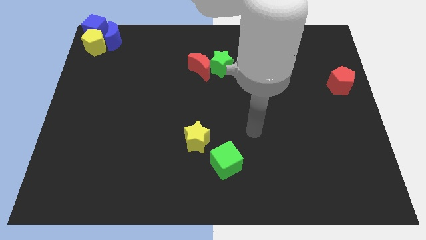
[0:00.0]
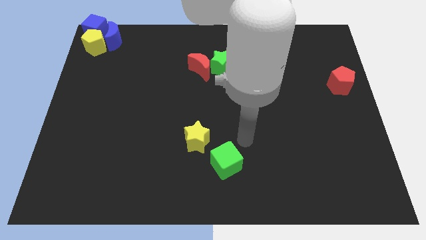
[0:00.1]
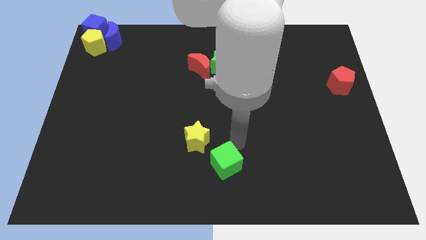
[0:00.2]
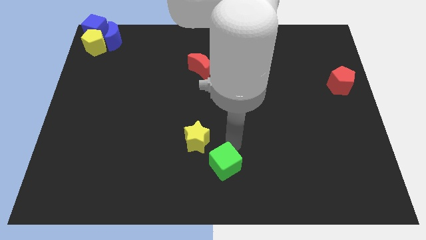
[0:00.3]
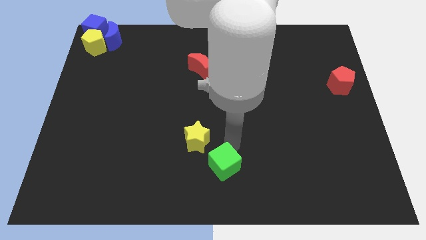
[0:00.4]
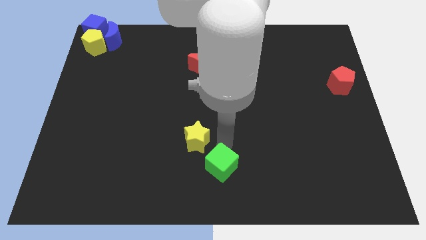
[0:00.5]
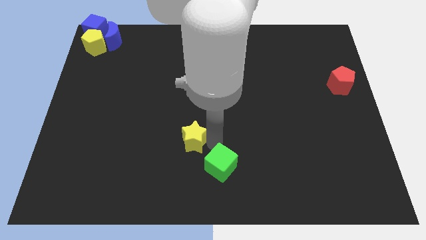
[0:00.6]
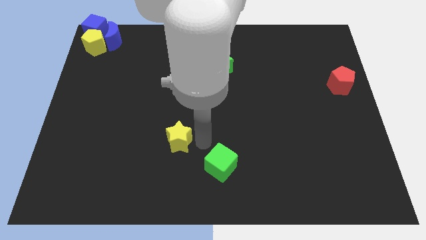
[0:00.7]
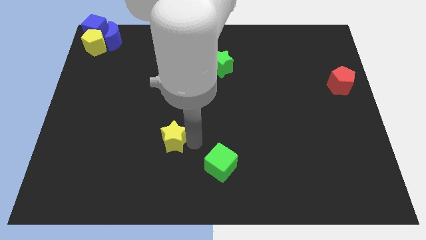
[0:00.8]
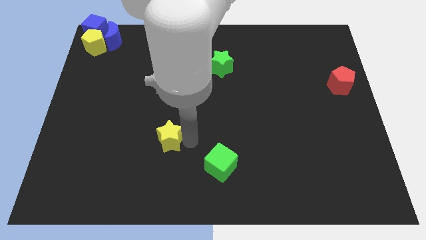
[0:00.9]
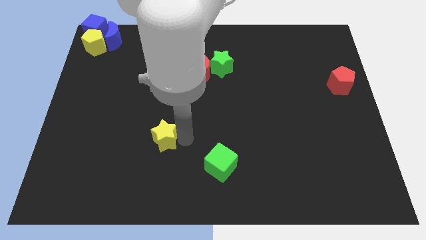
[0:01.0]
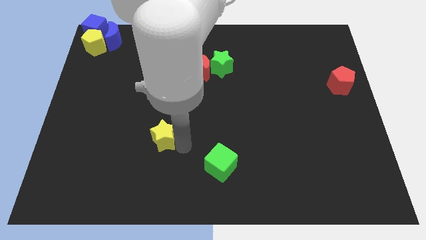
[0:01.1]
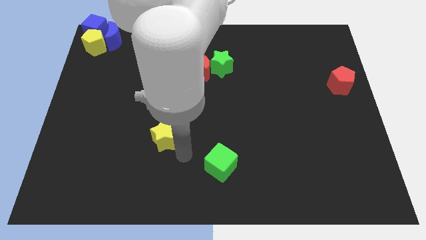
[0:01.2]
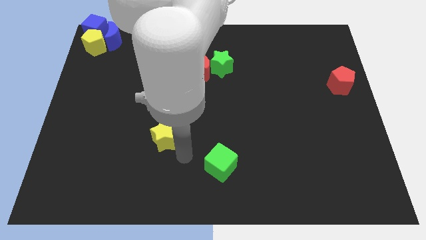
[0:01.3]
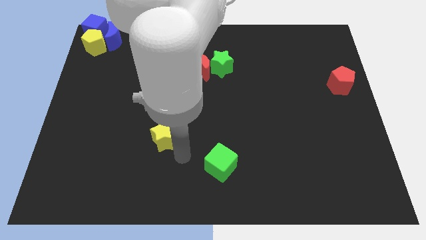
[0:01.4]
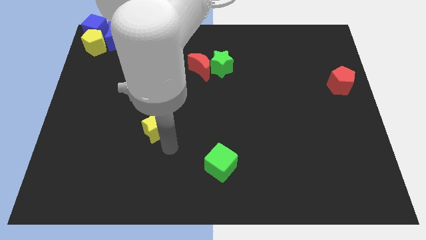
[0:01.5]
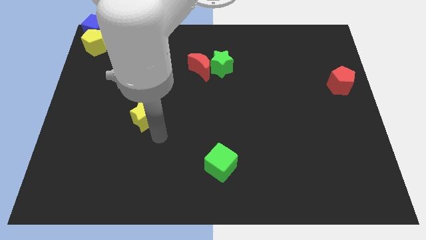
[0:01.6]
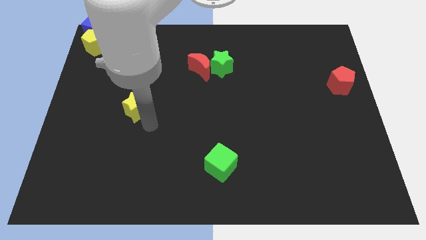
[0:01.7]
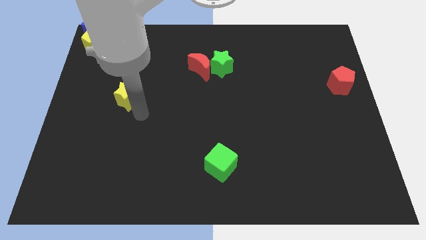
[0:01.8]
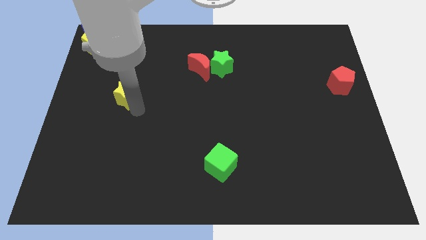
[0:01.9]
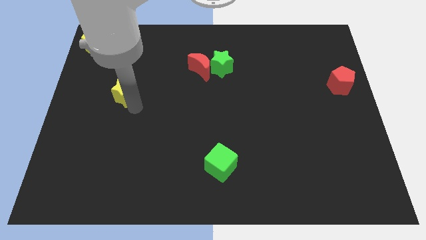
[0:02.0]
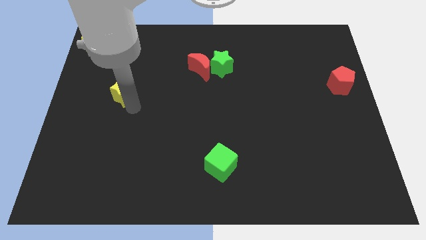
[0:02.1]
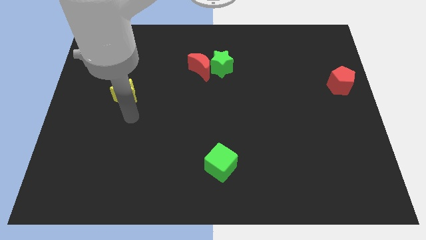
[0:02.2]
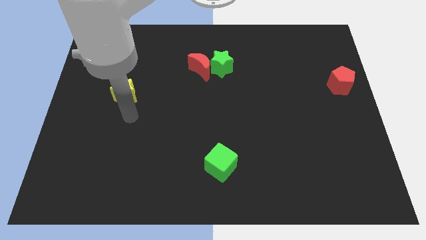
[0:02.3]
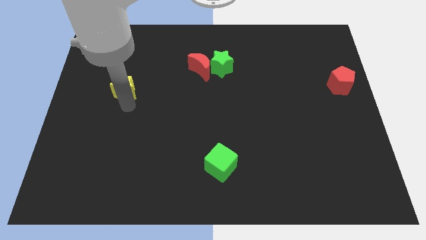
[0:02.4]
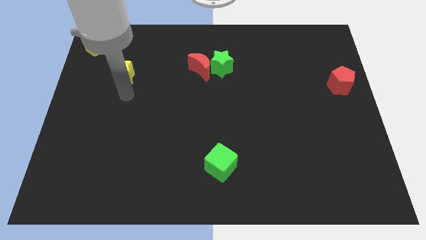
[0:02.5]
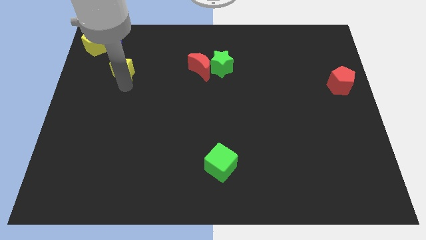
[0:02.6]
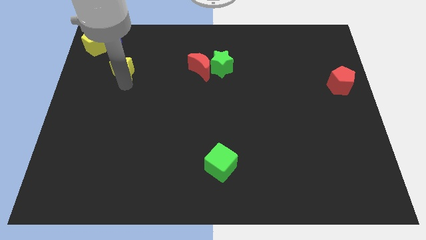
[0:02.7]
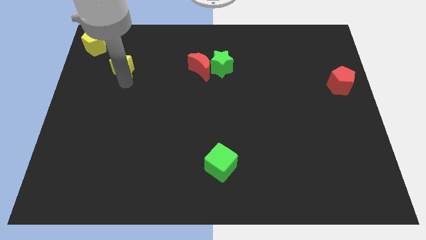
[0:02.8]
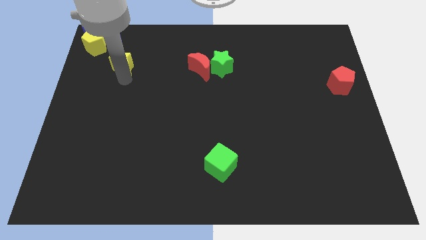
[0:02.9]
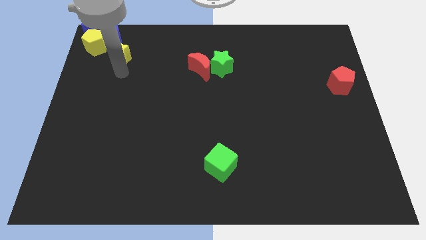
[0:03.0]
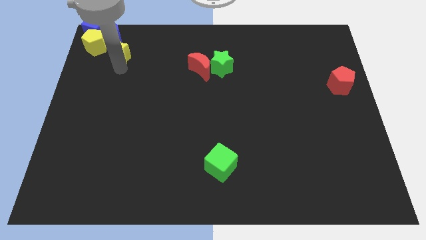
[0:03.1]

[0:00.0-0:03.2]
move the yellow star towards the group of blocks at the top left corner

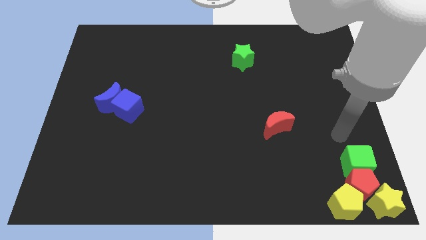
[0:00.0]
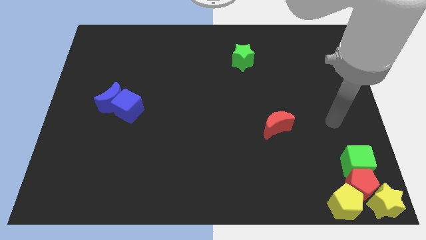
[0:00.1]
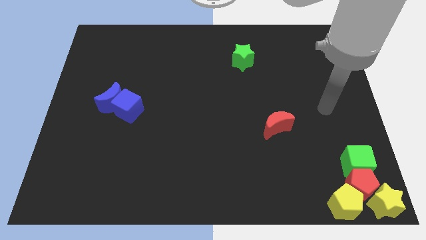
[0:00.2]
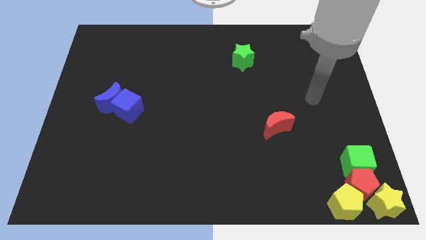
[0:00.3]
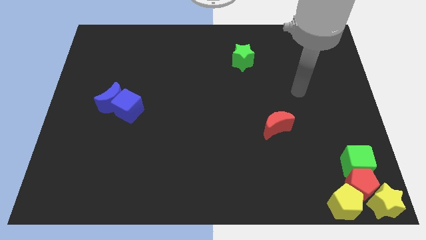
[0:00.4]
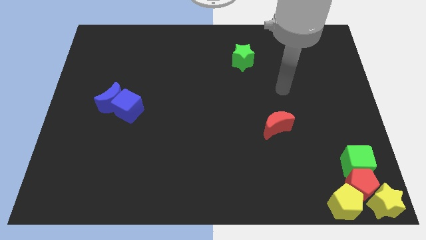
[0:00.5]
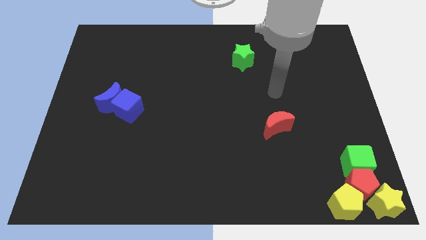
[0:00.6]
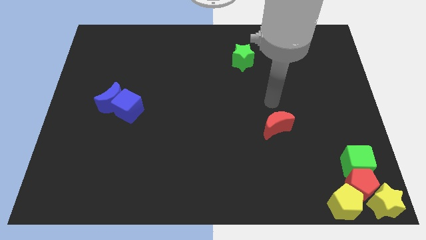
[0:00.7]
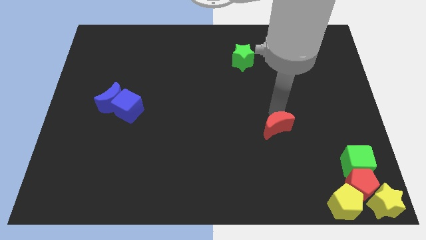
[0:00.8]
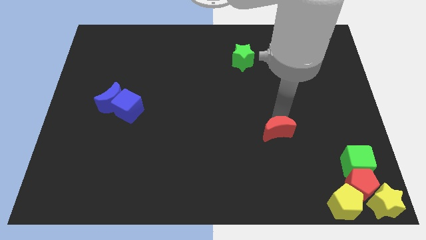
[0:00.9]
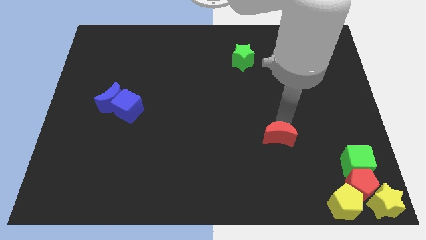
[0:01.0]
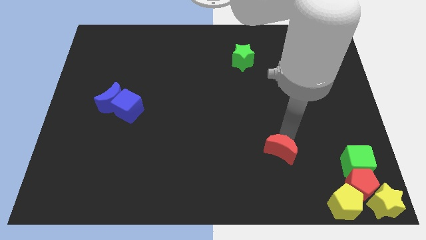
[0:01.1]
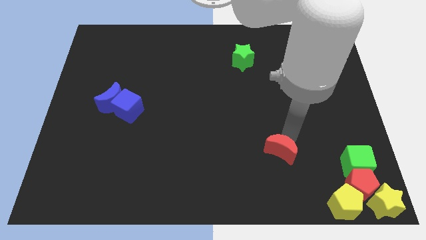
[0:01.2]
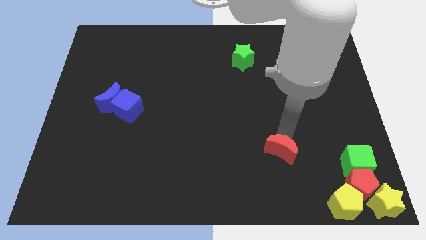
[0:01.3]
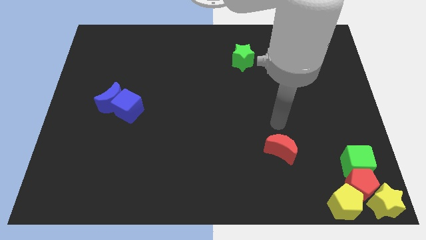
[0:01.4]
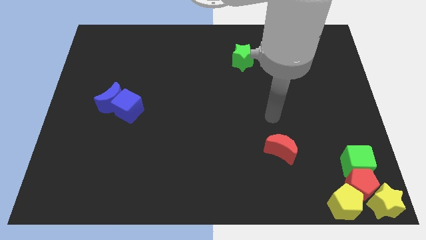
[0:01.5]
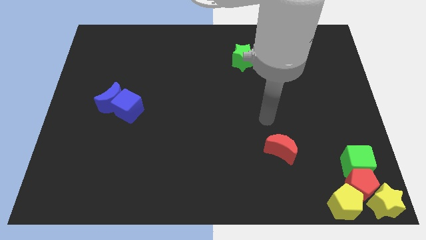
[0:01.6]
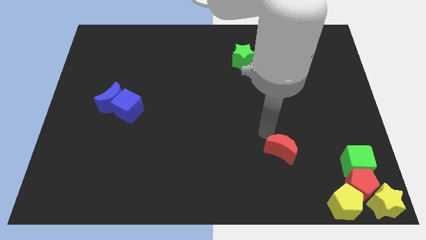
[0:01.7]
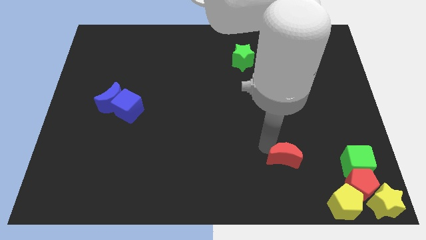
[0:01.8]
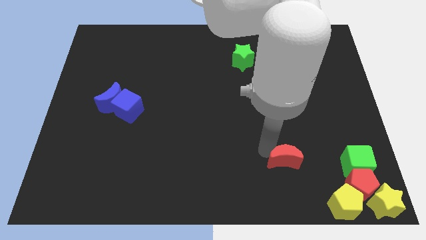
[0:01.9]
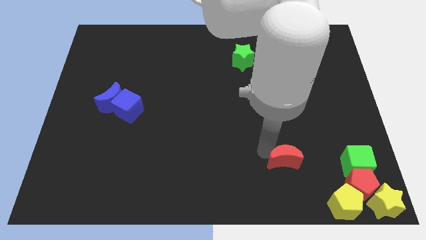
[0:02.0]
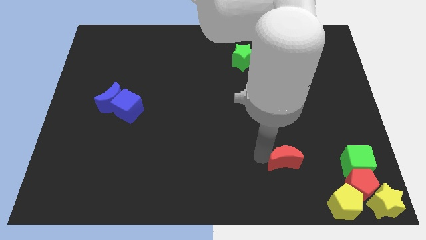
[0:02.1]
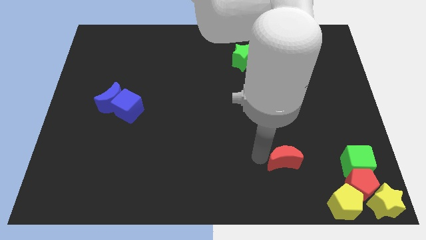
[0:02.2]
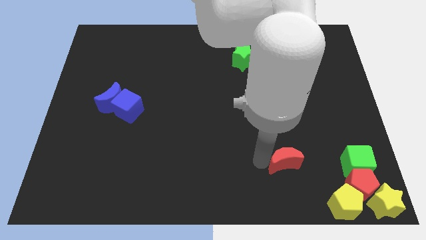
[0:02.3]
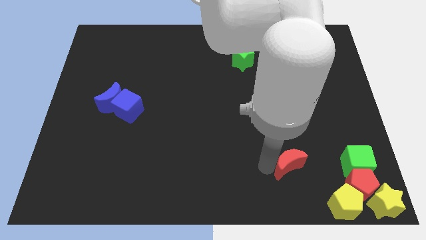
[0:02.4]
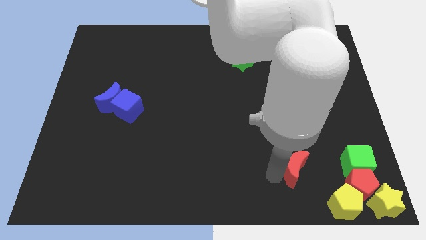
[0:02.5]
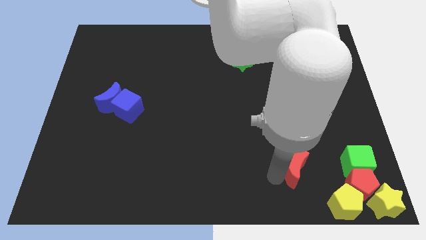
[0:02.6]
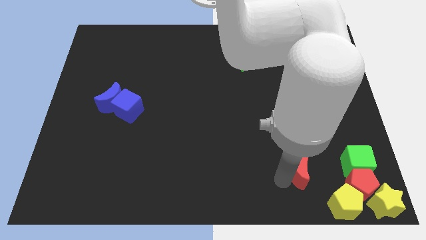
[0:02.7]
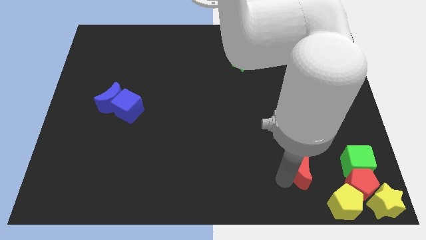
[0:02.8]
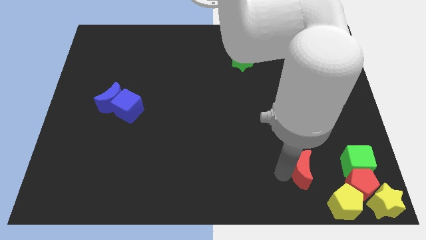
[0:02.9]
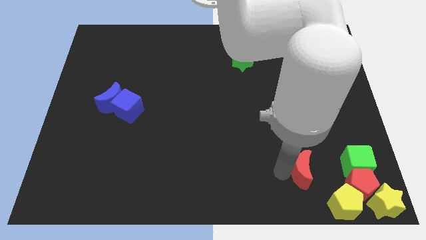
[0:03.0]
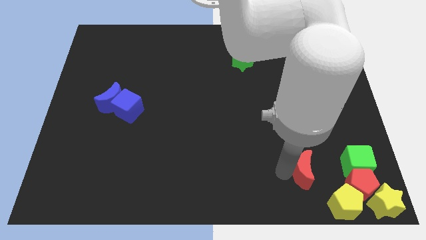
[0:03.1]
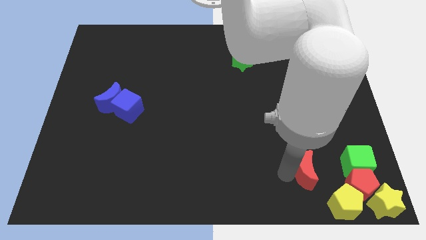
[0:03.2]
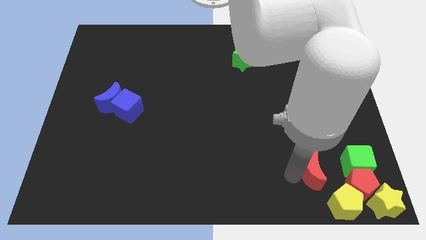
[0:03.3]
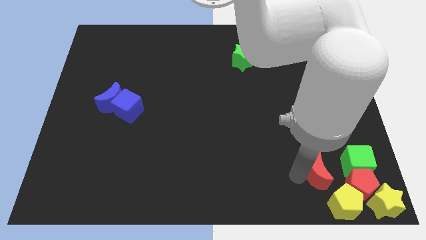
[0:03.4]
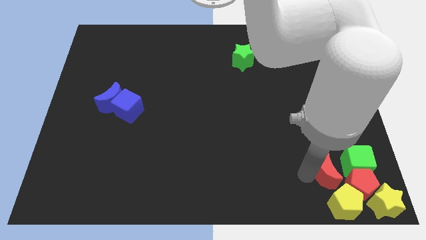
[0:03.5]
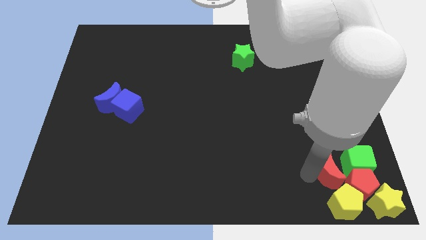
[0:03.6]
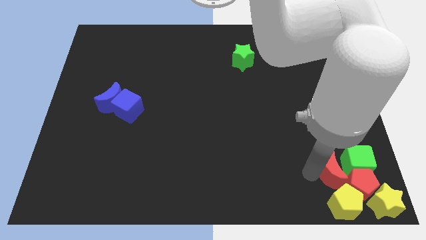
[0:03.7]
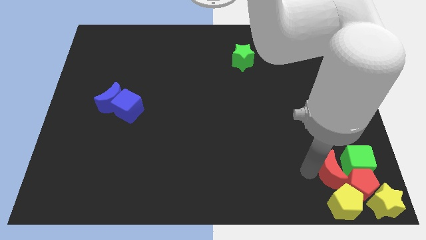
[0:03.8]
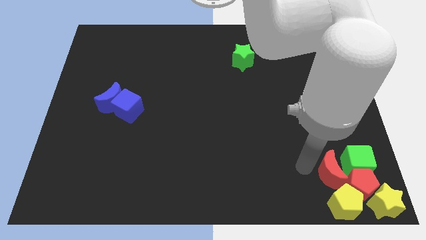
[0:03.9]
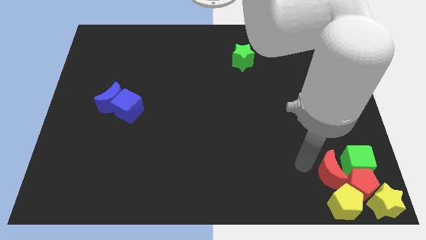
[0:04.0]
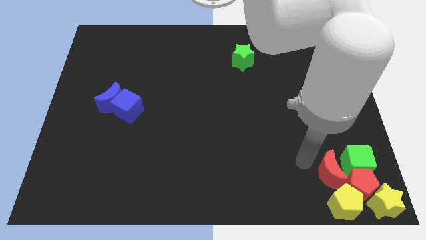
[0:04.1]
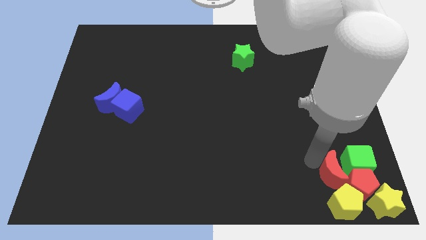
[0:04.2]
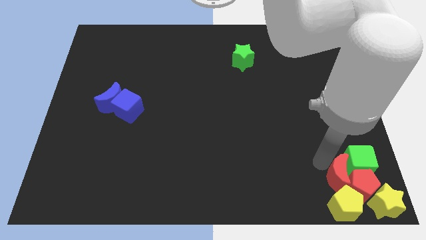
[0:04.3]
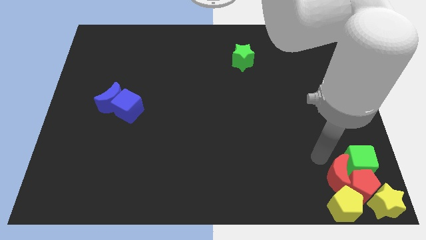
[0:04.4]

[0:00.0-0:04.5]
move the red moon to the top of the yellow pentagon

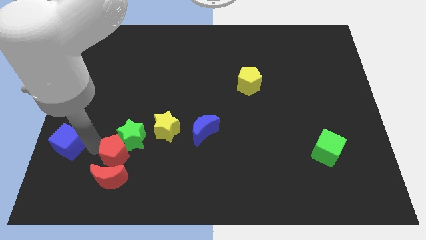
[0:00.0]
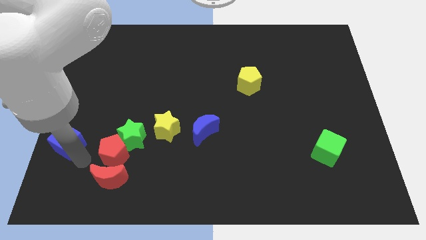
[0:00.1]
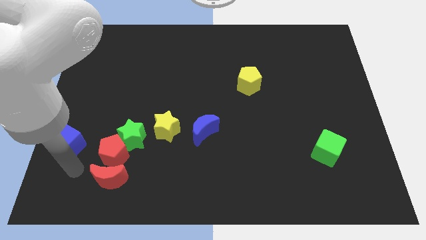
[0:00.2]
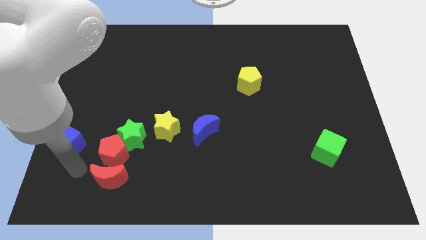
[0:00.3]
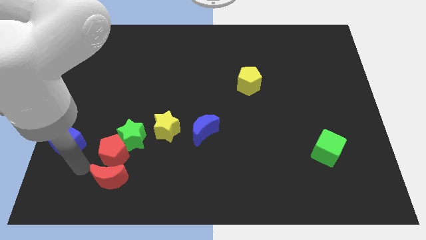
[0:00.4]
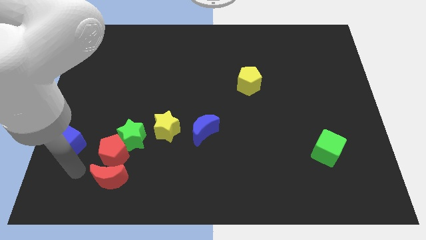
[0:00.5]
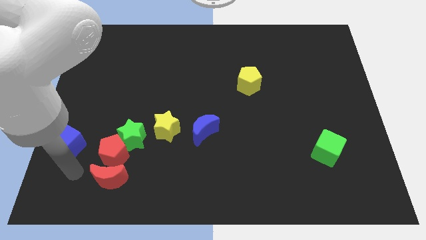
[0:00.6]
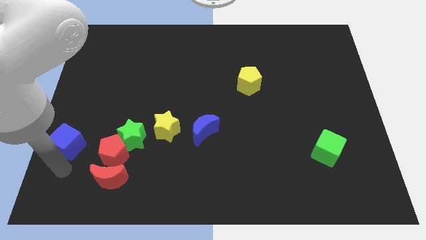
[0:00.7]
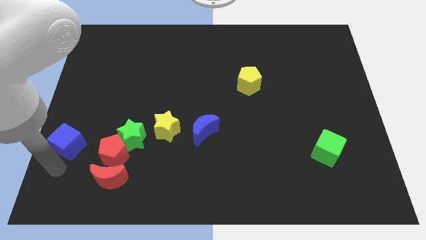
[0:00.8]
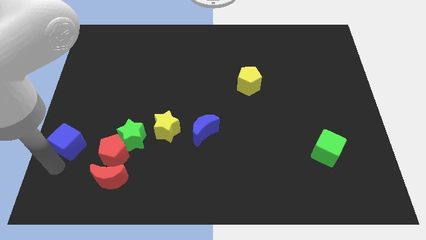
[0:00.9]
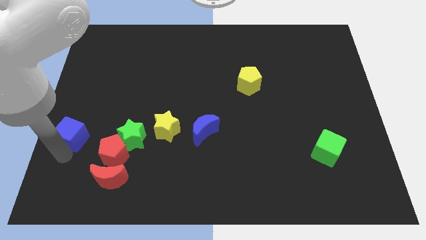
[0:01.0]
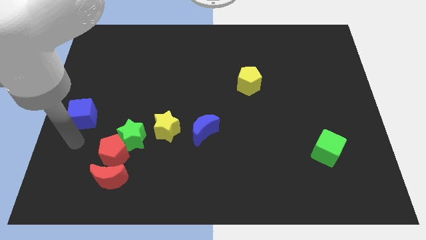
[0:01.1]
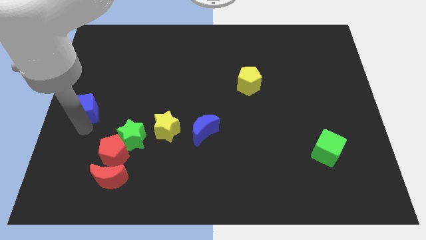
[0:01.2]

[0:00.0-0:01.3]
move the blue cube to the top left of the red pentagon
